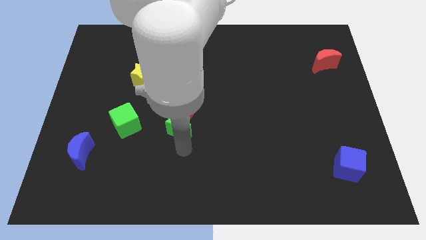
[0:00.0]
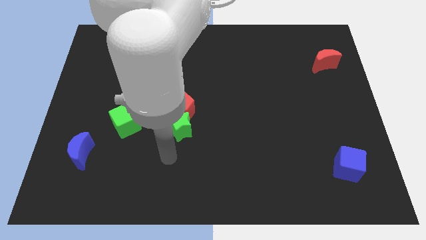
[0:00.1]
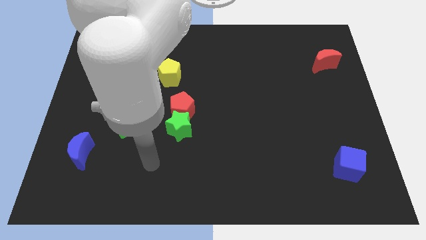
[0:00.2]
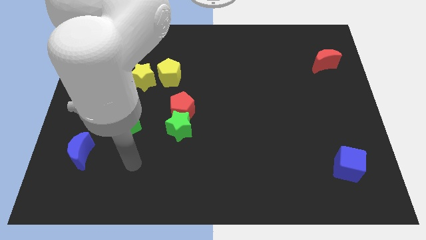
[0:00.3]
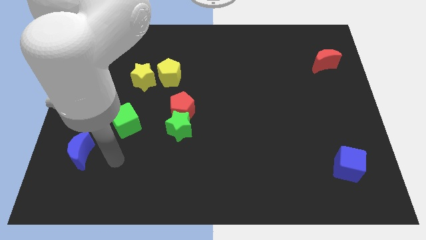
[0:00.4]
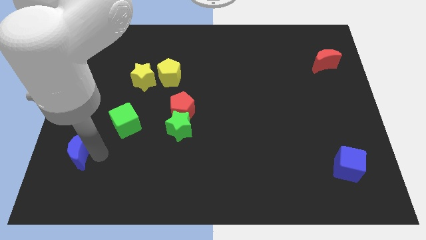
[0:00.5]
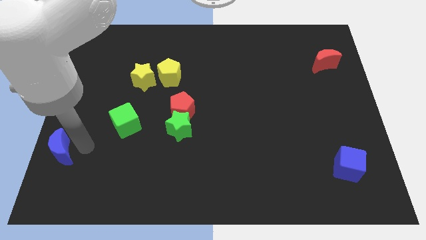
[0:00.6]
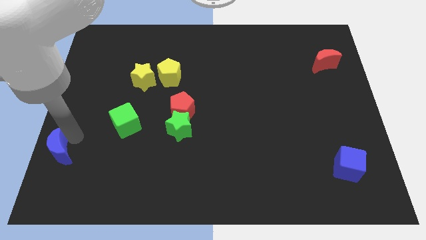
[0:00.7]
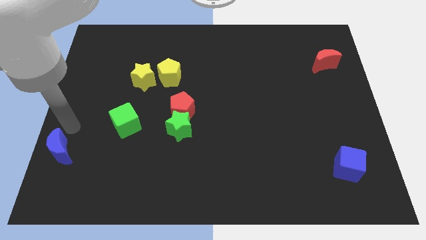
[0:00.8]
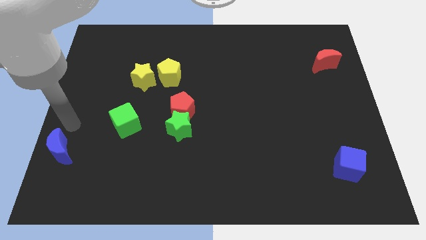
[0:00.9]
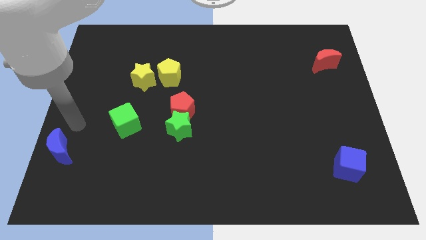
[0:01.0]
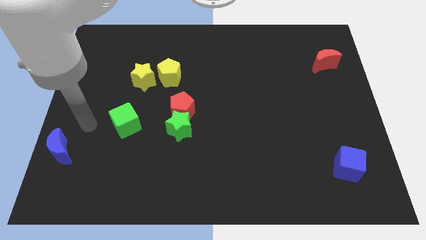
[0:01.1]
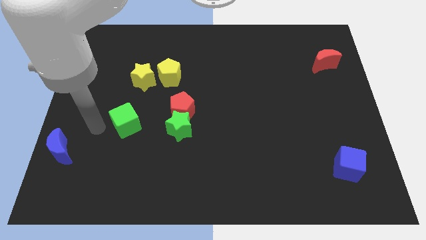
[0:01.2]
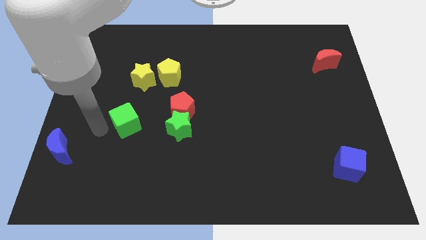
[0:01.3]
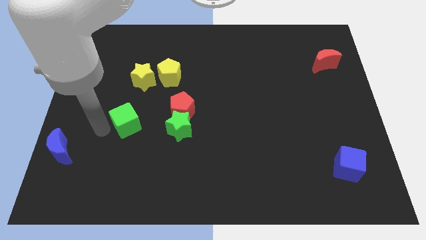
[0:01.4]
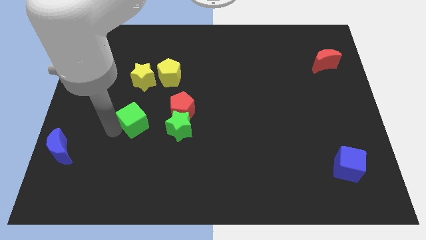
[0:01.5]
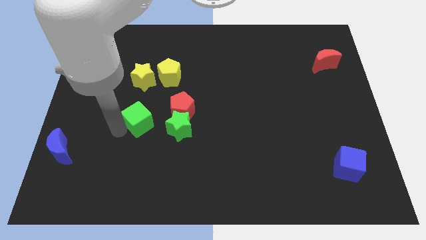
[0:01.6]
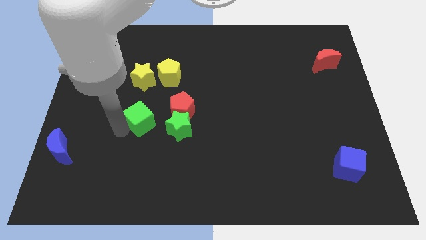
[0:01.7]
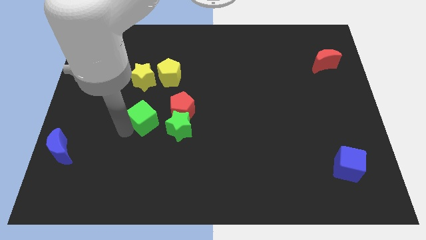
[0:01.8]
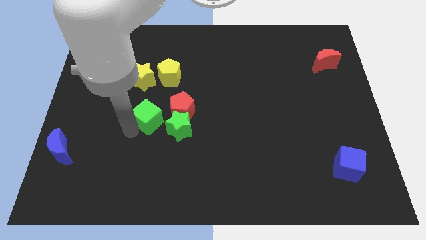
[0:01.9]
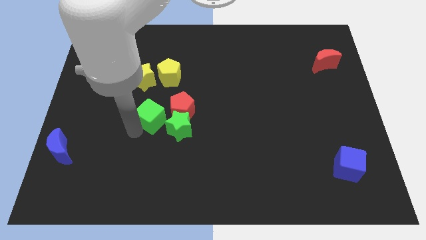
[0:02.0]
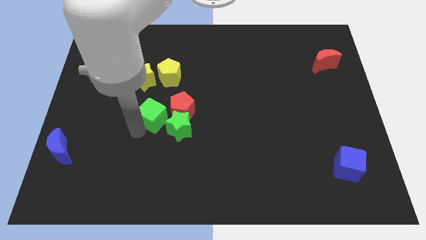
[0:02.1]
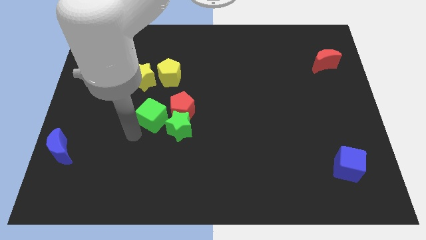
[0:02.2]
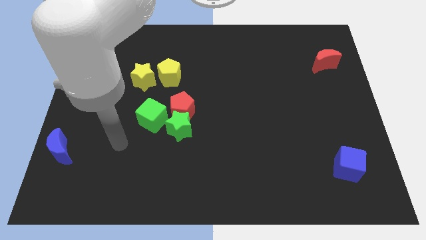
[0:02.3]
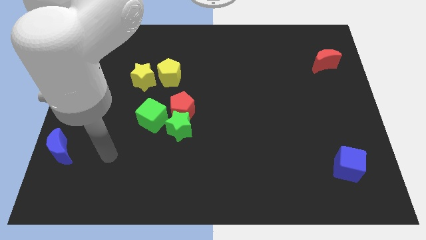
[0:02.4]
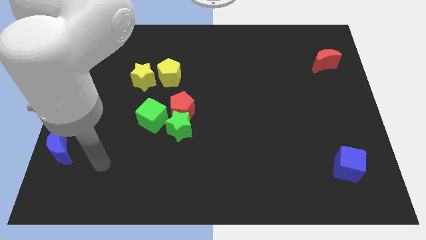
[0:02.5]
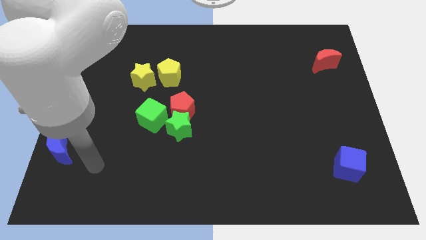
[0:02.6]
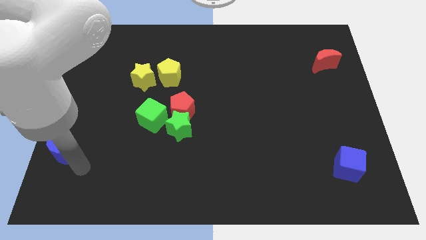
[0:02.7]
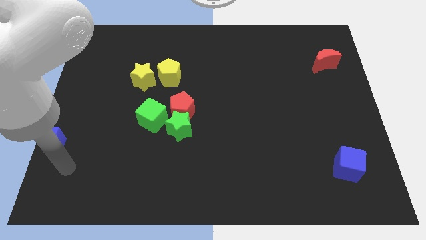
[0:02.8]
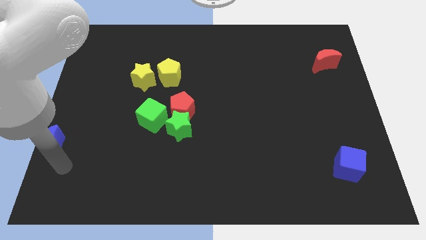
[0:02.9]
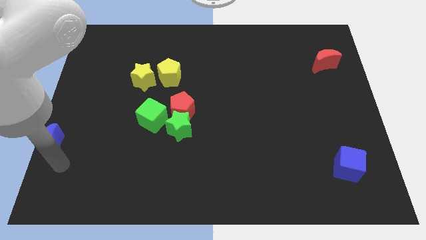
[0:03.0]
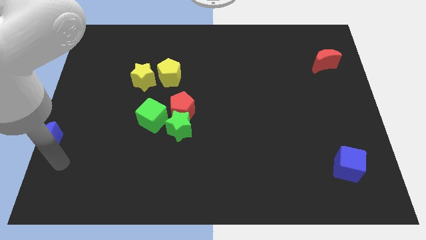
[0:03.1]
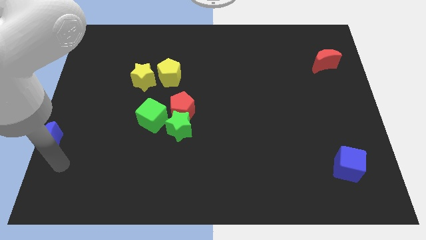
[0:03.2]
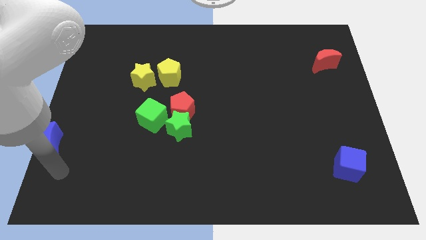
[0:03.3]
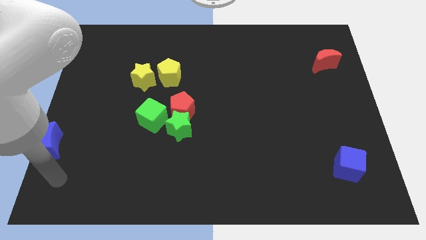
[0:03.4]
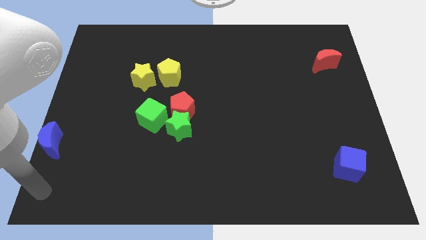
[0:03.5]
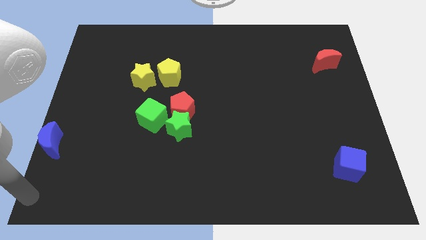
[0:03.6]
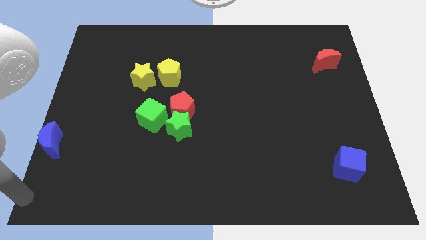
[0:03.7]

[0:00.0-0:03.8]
move your arm away from the green star

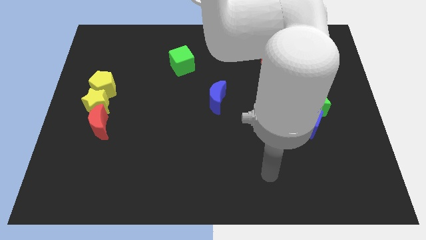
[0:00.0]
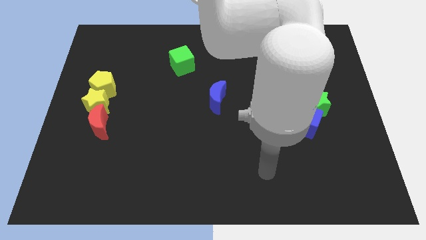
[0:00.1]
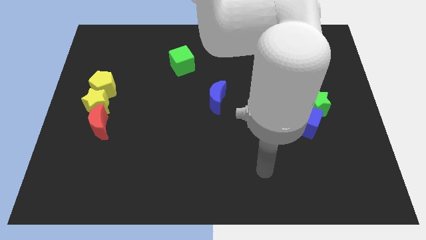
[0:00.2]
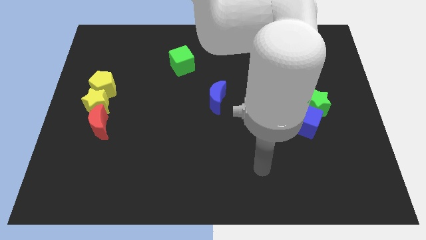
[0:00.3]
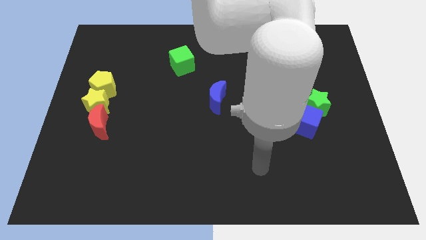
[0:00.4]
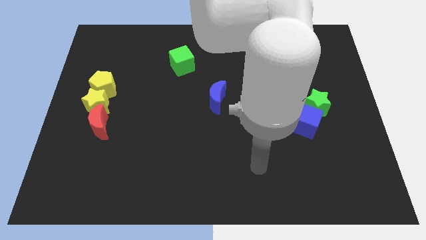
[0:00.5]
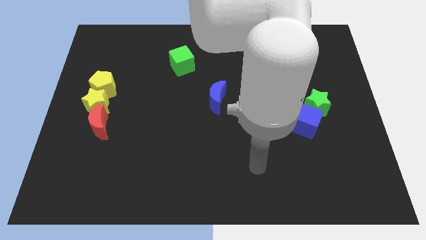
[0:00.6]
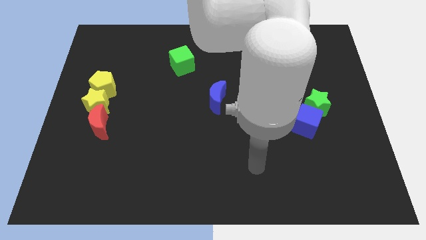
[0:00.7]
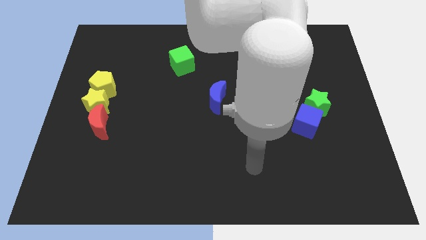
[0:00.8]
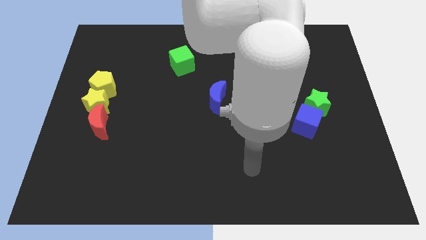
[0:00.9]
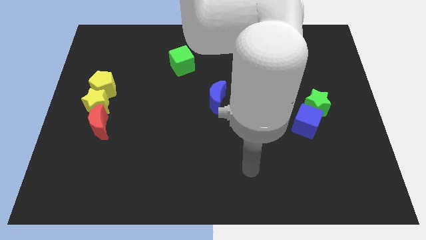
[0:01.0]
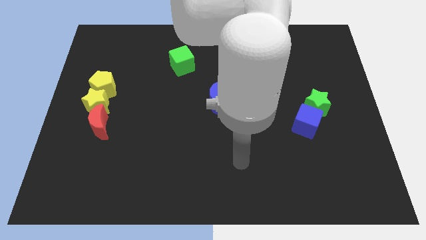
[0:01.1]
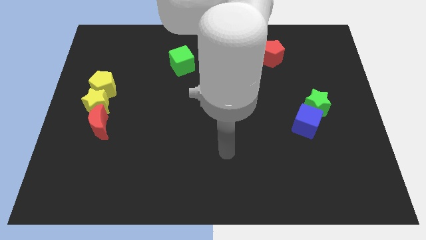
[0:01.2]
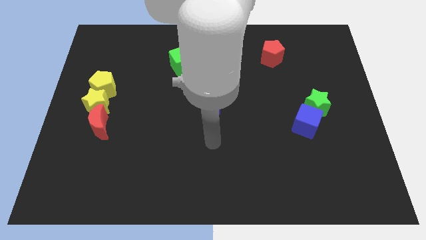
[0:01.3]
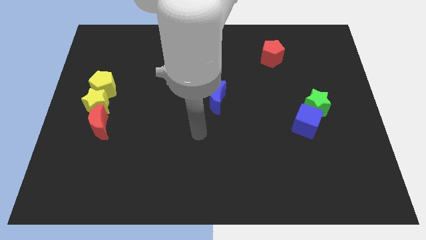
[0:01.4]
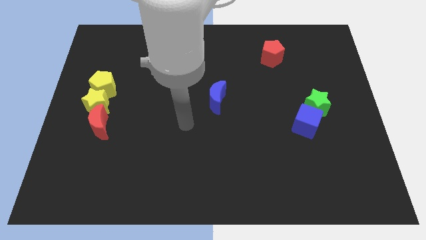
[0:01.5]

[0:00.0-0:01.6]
move arm below blue moon

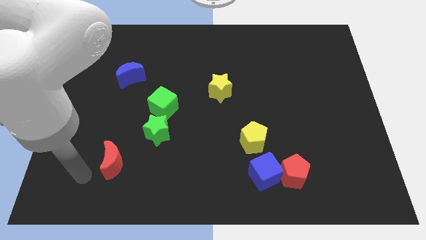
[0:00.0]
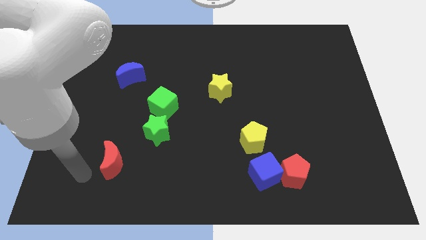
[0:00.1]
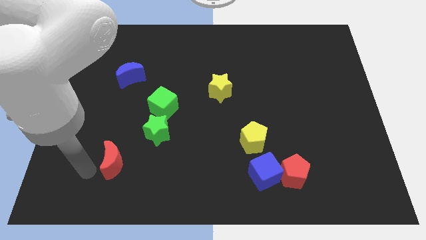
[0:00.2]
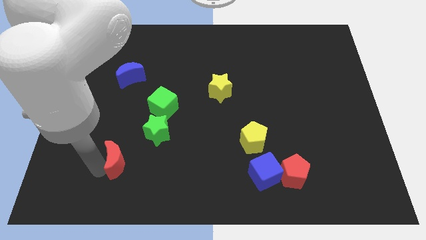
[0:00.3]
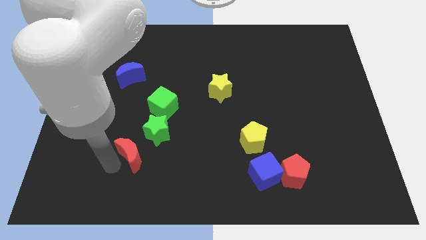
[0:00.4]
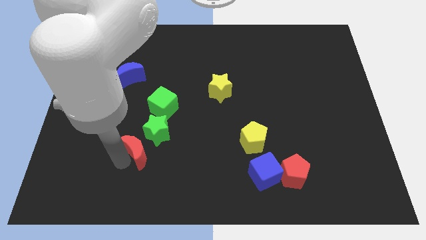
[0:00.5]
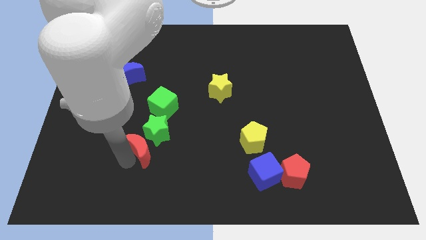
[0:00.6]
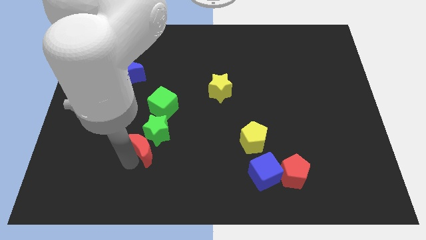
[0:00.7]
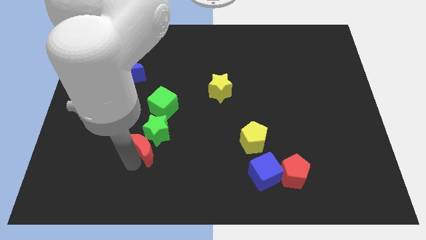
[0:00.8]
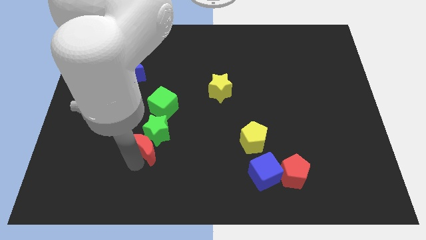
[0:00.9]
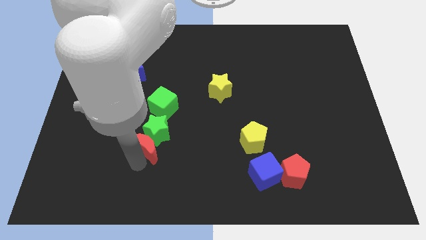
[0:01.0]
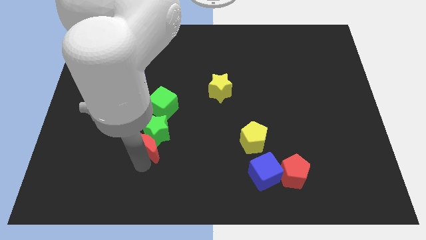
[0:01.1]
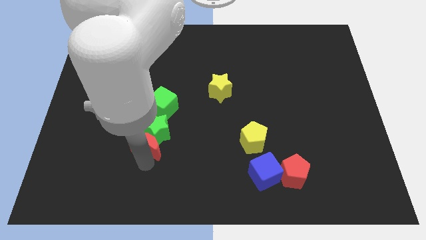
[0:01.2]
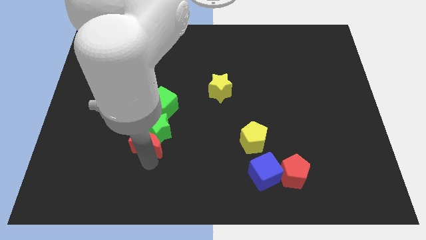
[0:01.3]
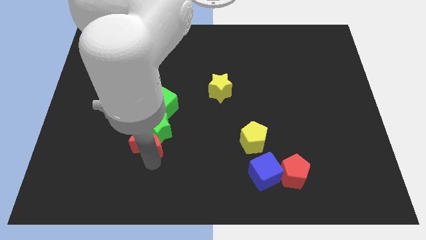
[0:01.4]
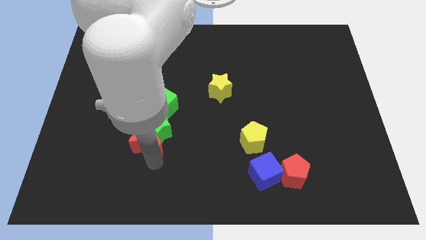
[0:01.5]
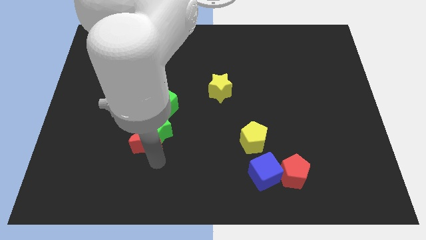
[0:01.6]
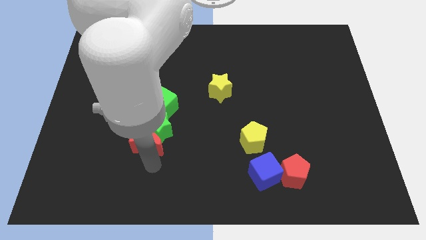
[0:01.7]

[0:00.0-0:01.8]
push the red moon into the green star

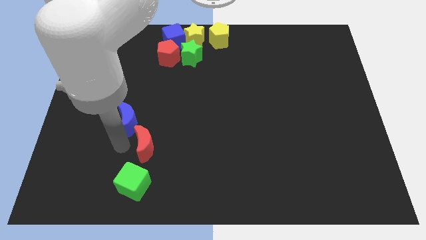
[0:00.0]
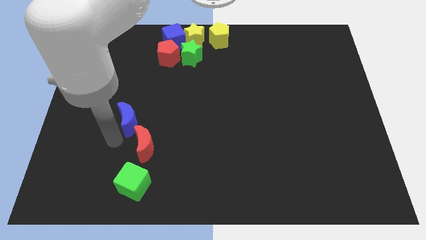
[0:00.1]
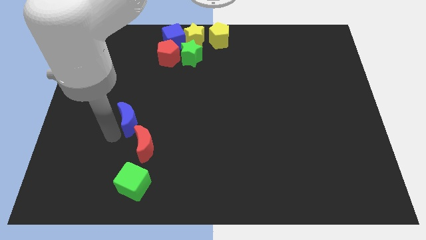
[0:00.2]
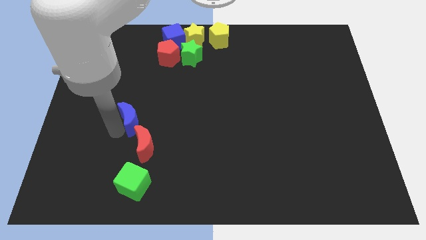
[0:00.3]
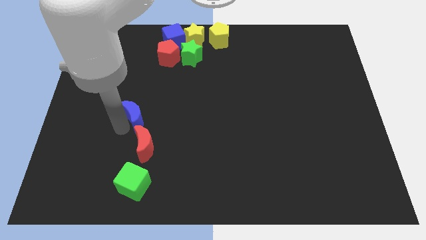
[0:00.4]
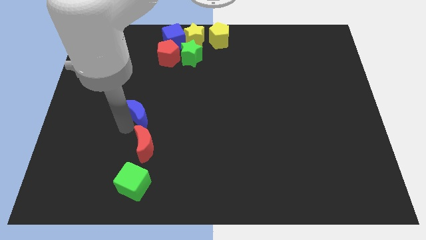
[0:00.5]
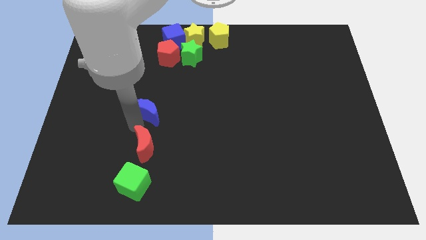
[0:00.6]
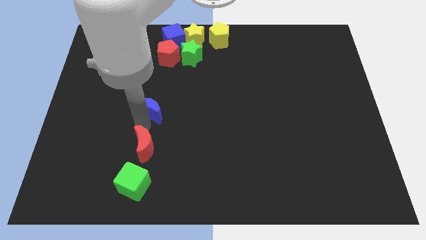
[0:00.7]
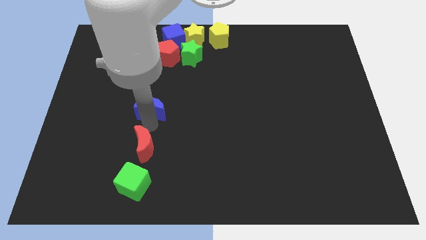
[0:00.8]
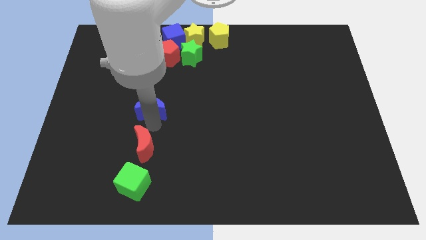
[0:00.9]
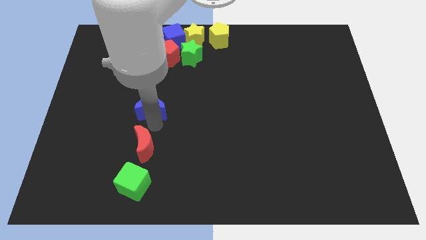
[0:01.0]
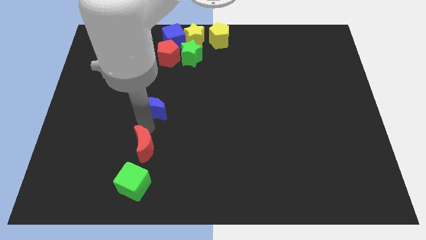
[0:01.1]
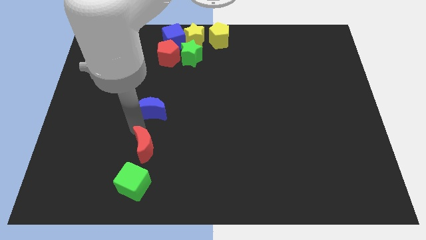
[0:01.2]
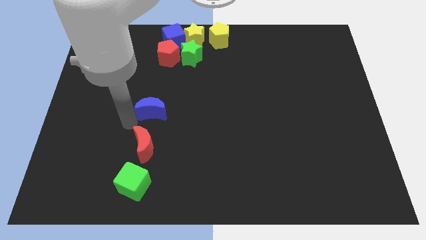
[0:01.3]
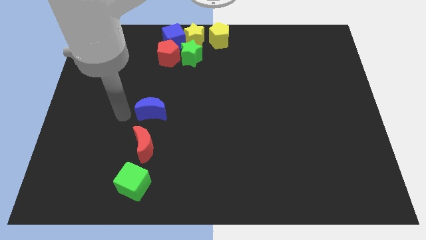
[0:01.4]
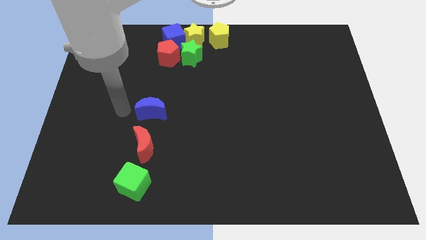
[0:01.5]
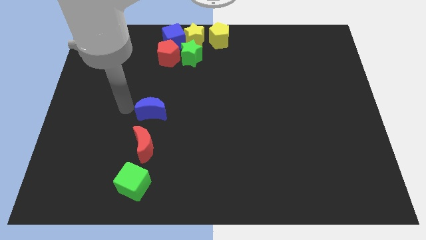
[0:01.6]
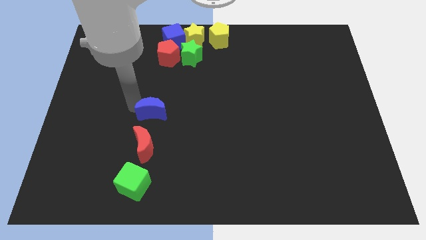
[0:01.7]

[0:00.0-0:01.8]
separate the blue moon from the red moon
